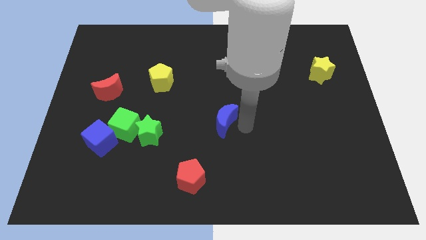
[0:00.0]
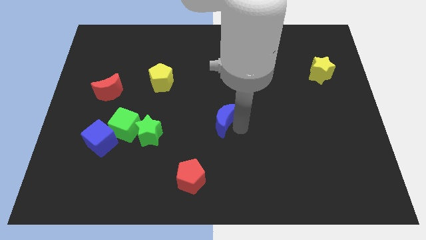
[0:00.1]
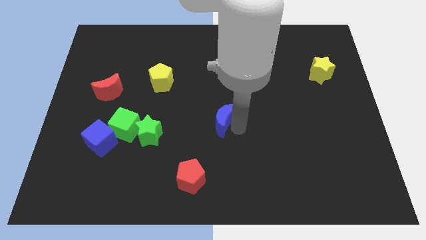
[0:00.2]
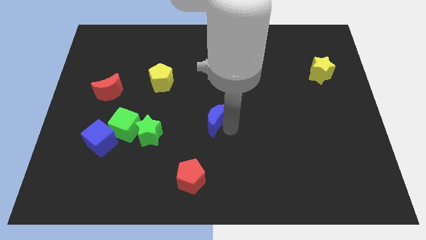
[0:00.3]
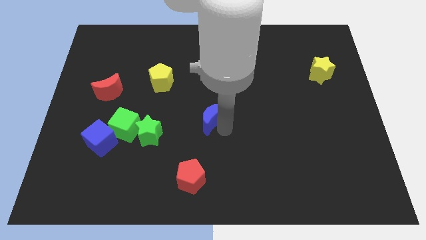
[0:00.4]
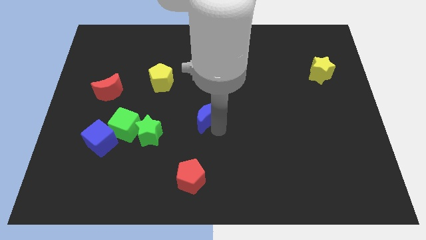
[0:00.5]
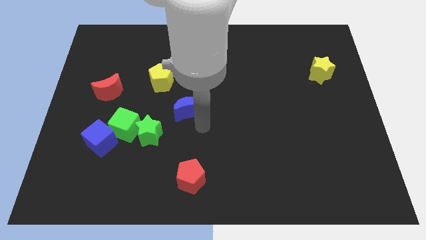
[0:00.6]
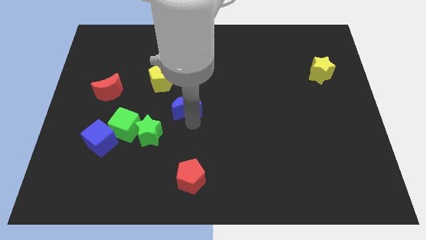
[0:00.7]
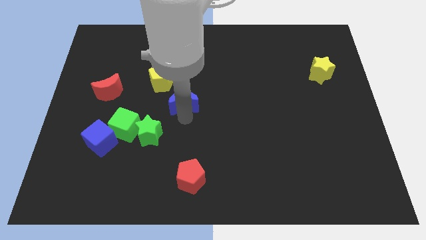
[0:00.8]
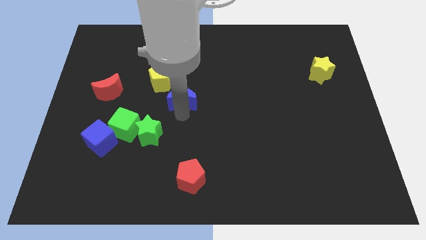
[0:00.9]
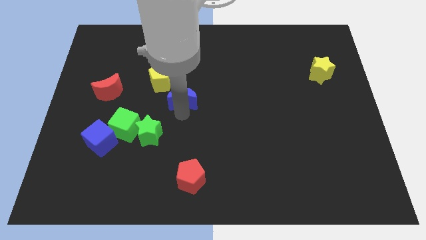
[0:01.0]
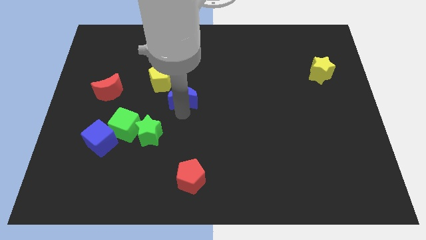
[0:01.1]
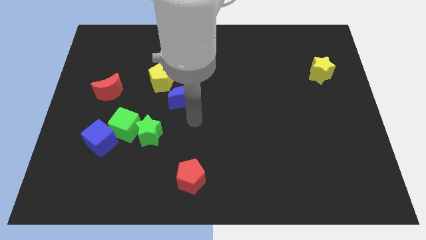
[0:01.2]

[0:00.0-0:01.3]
move the blue crescent below the yellow pentagon

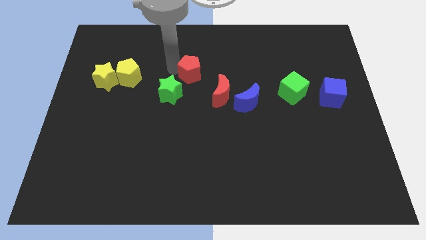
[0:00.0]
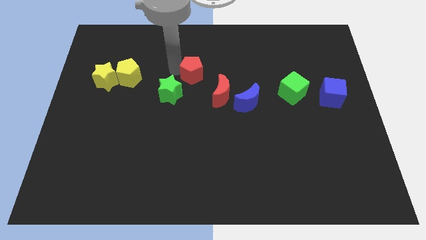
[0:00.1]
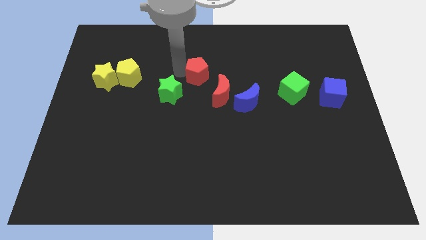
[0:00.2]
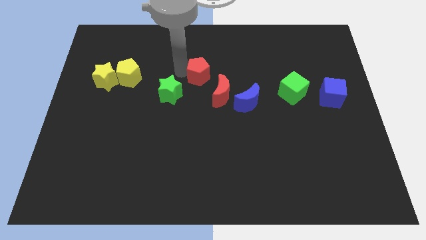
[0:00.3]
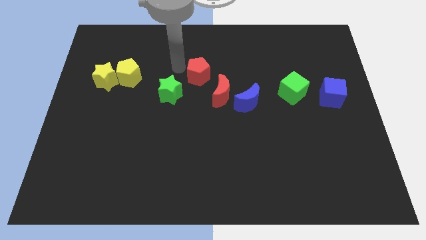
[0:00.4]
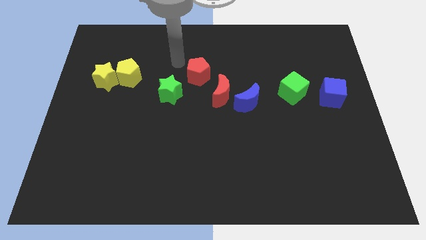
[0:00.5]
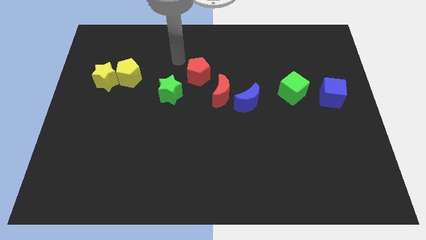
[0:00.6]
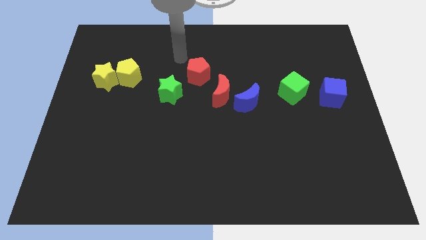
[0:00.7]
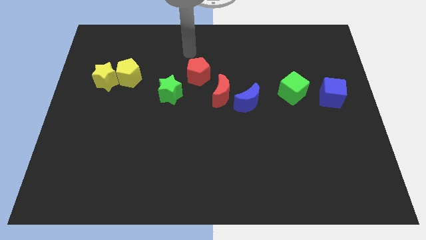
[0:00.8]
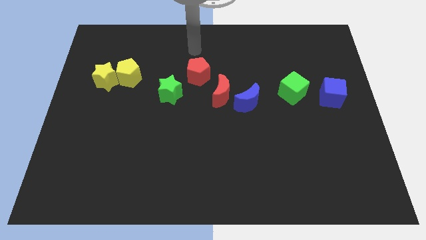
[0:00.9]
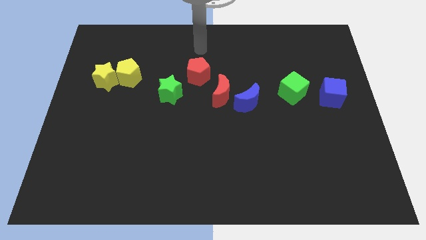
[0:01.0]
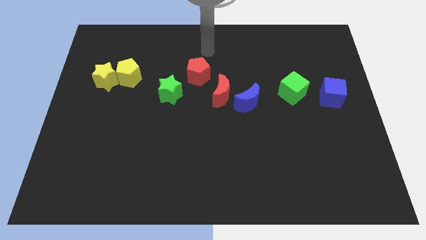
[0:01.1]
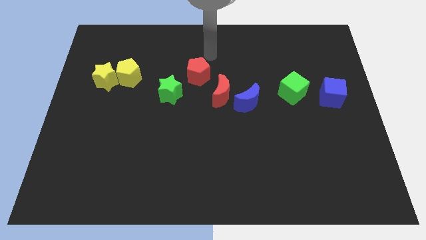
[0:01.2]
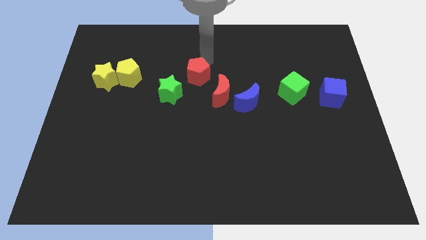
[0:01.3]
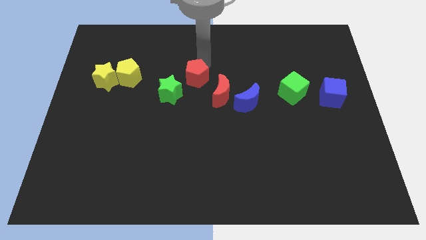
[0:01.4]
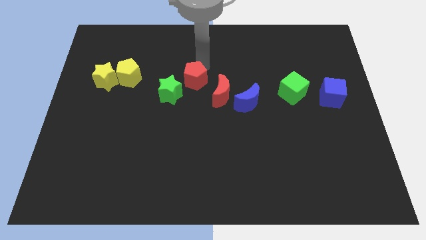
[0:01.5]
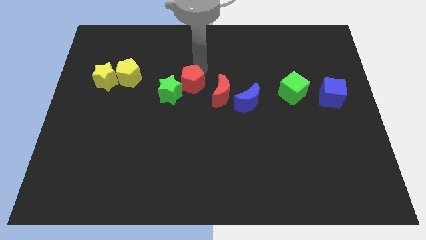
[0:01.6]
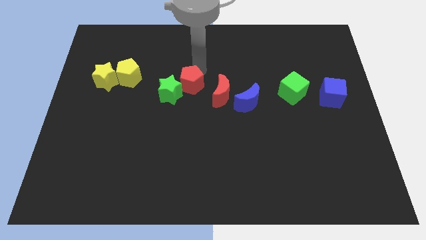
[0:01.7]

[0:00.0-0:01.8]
put the red pentagon diagonally above the top right side of the green star

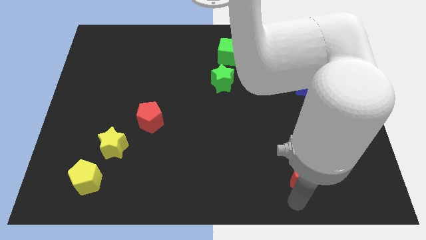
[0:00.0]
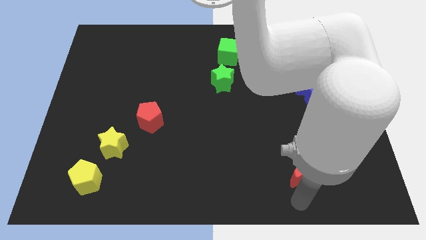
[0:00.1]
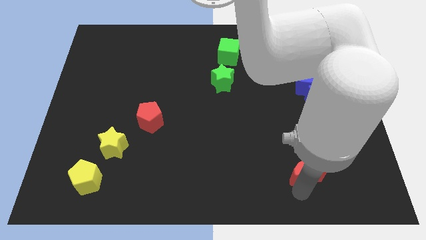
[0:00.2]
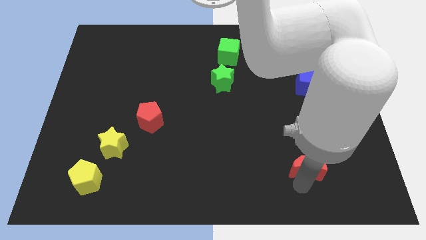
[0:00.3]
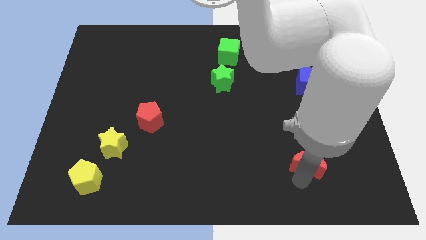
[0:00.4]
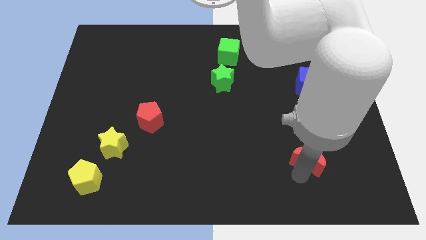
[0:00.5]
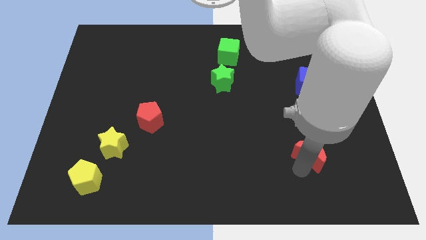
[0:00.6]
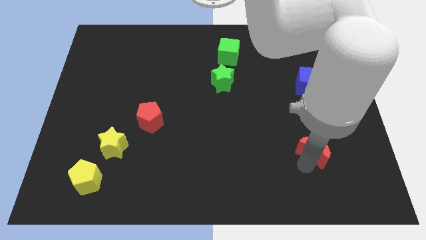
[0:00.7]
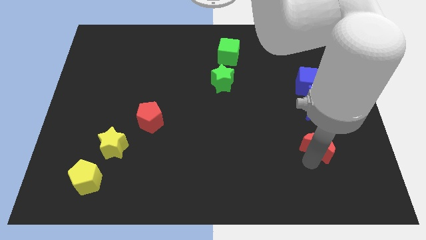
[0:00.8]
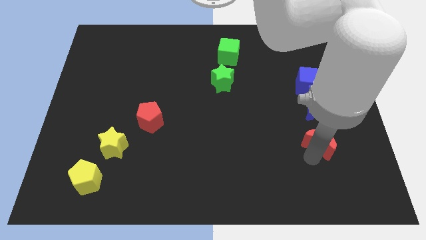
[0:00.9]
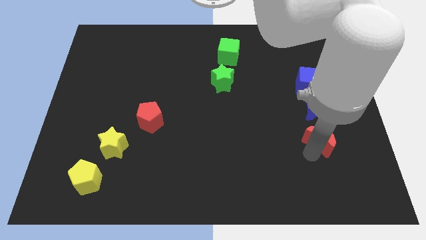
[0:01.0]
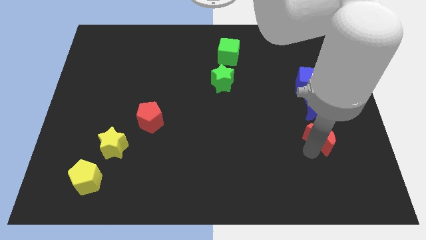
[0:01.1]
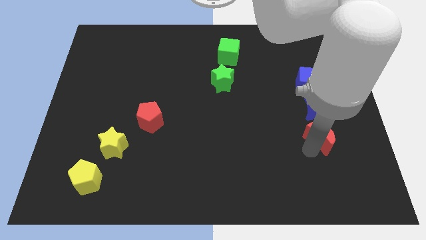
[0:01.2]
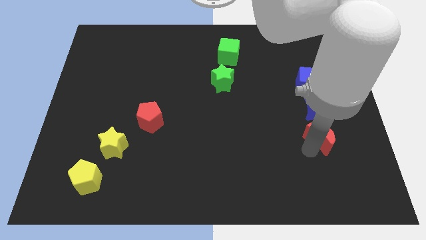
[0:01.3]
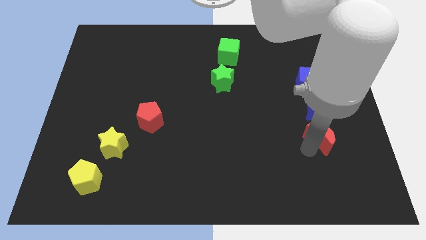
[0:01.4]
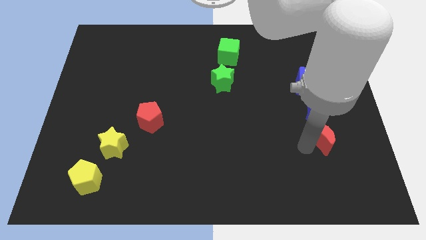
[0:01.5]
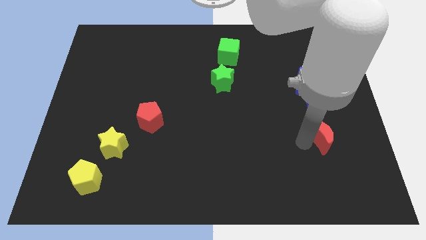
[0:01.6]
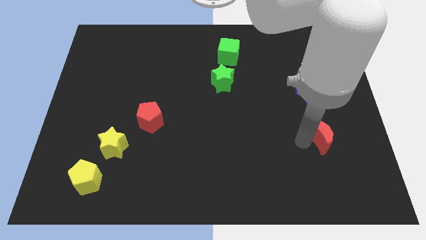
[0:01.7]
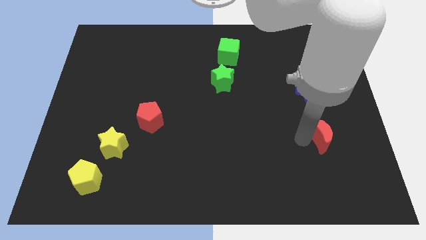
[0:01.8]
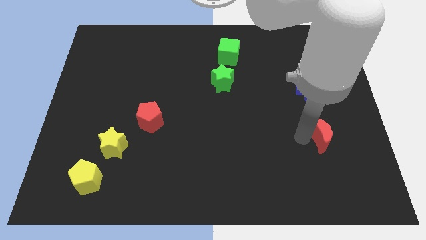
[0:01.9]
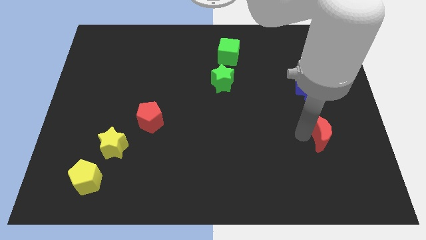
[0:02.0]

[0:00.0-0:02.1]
place the red crescent underneath the blue crescent

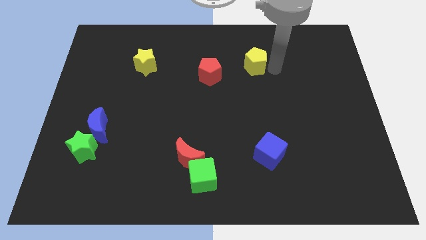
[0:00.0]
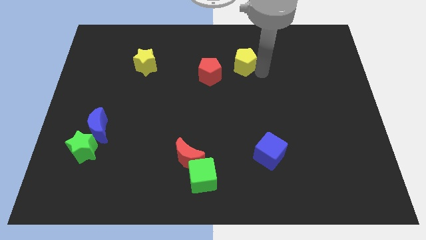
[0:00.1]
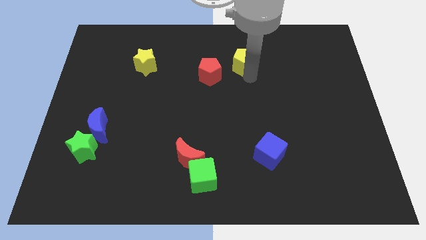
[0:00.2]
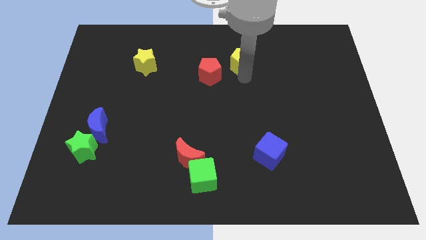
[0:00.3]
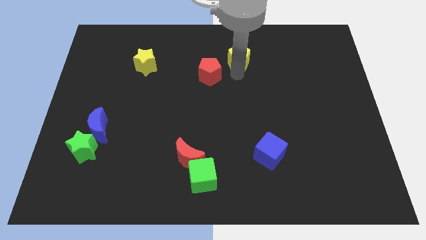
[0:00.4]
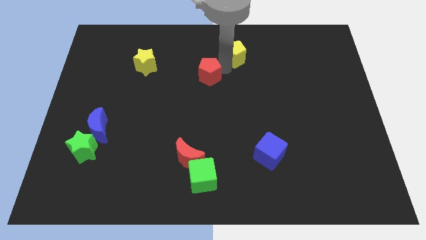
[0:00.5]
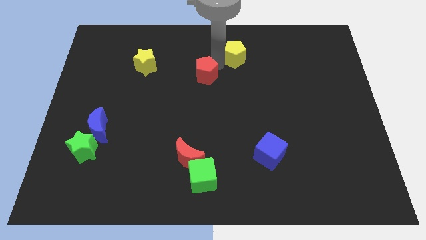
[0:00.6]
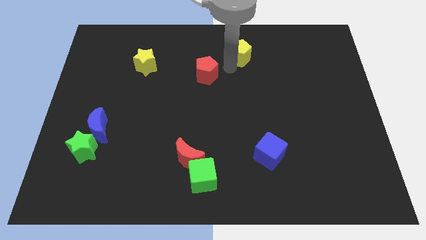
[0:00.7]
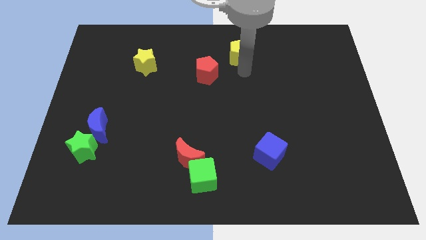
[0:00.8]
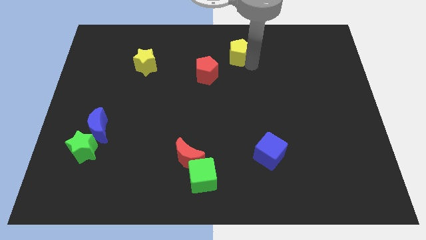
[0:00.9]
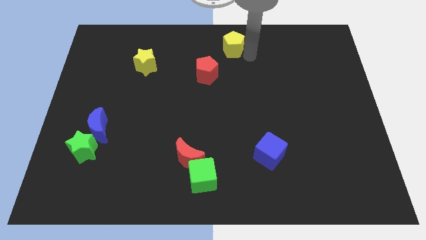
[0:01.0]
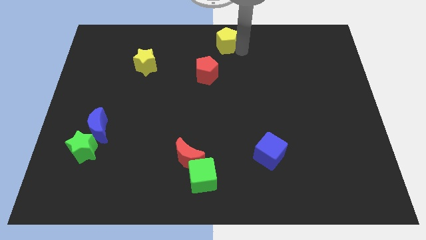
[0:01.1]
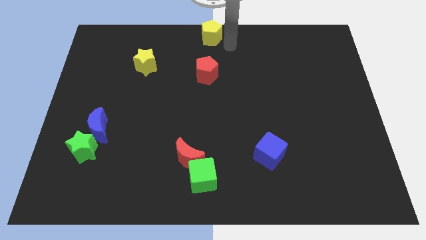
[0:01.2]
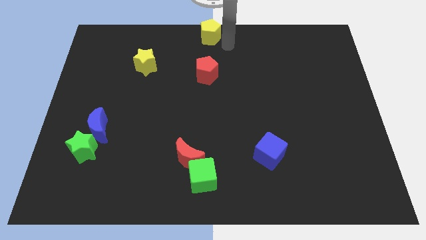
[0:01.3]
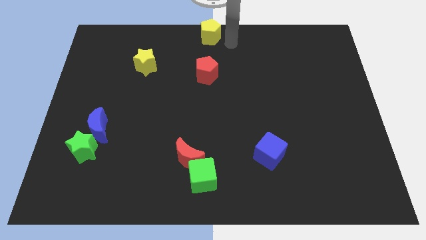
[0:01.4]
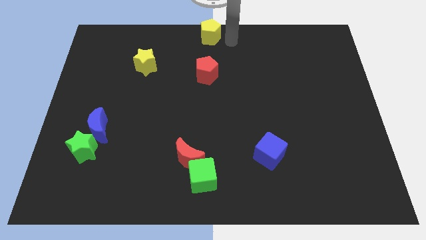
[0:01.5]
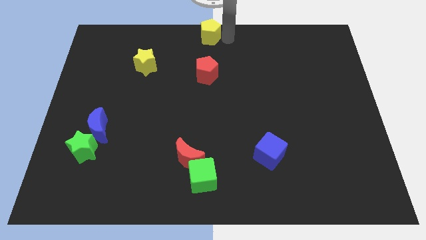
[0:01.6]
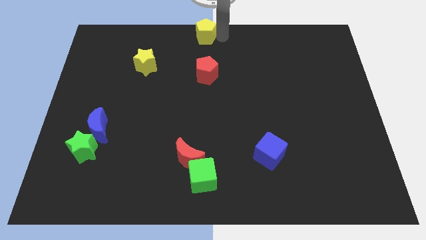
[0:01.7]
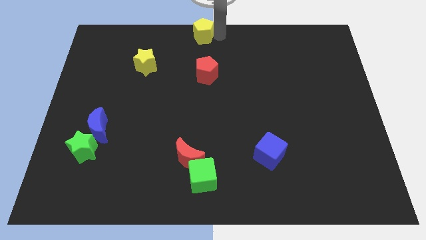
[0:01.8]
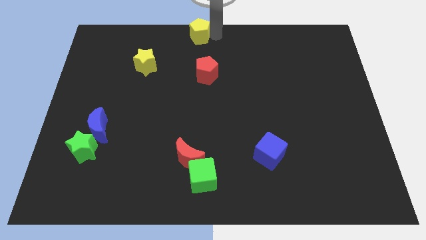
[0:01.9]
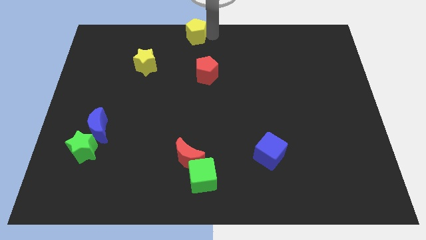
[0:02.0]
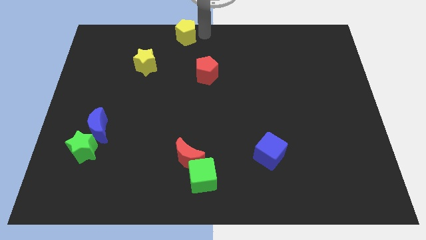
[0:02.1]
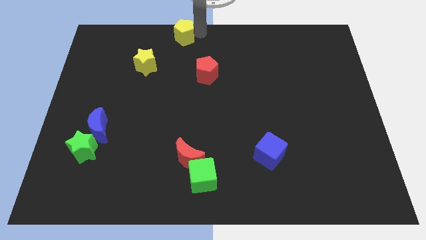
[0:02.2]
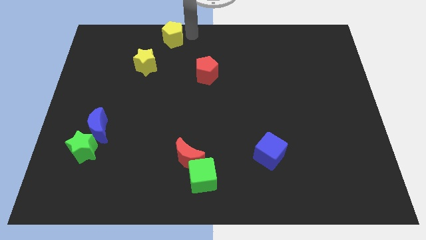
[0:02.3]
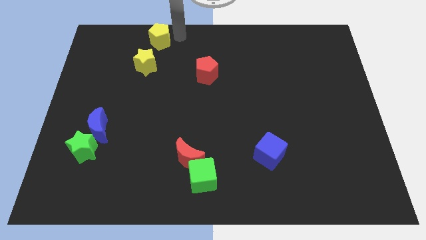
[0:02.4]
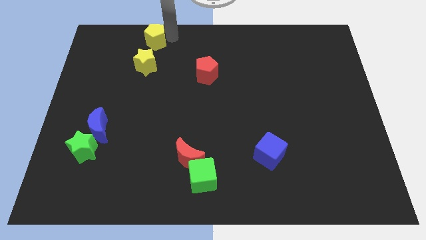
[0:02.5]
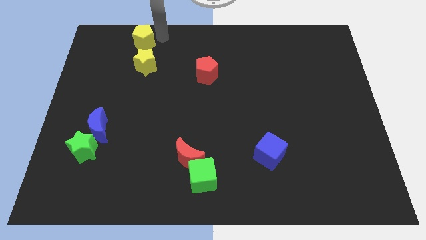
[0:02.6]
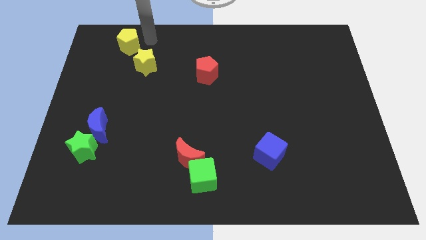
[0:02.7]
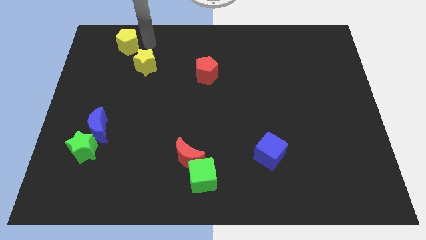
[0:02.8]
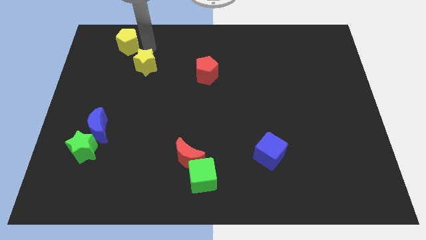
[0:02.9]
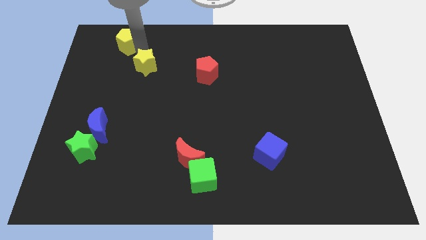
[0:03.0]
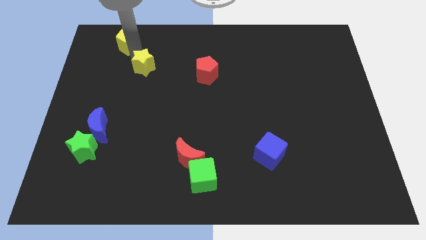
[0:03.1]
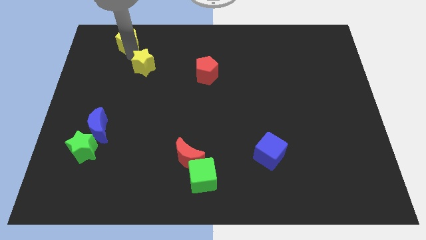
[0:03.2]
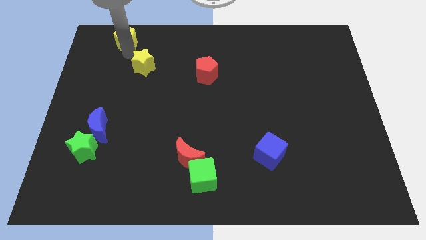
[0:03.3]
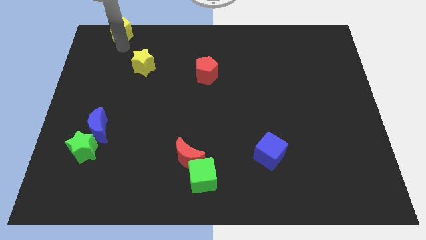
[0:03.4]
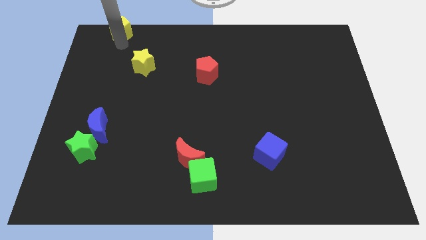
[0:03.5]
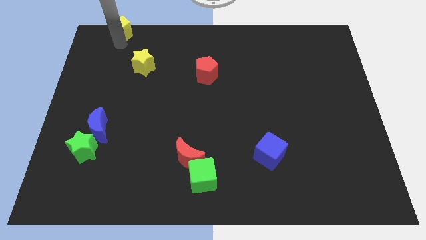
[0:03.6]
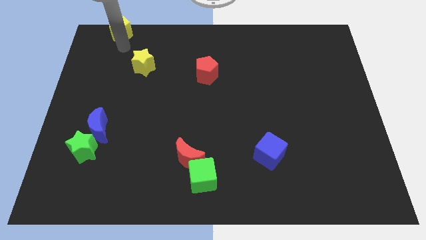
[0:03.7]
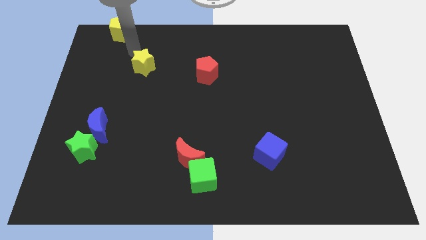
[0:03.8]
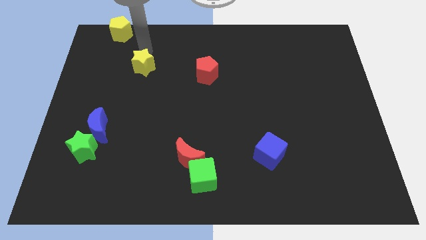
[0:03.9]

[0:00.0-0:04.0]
slide the yellow pentagon diagonally top right to the red pentagon
